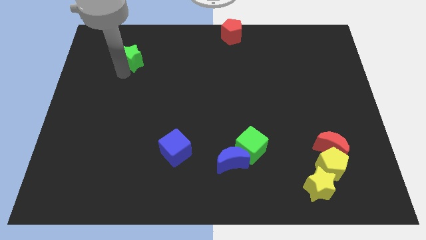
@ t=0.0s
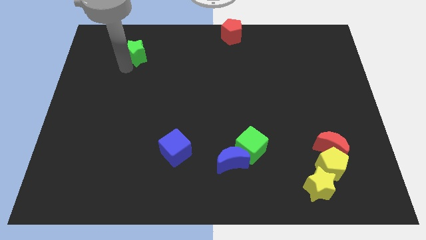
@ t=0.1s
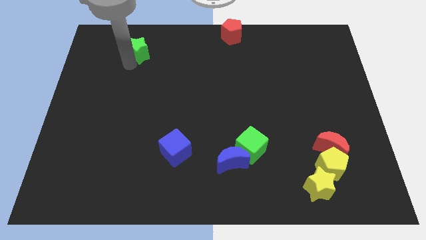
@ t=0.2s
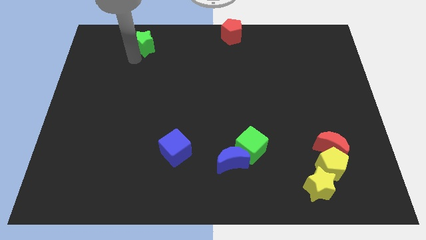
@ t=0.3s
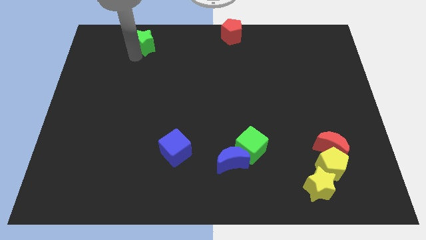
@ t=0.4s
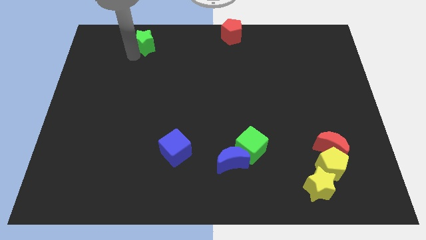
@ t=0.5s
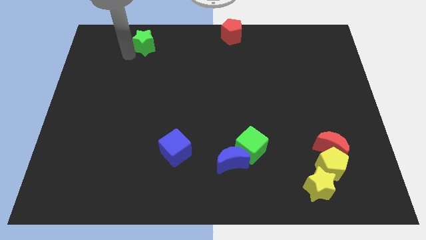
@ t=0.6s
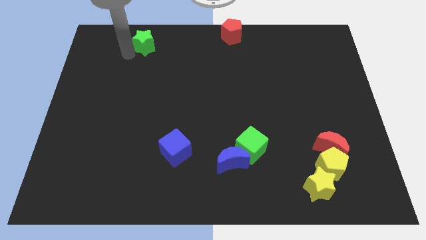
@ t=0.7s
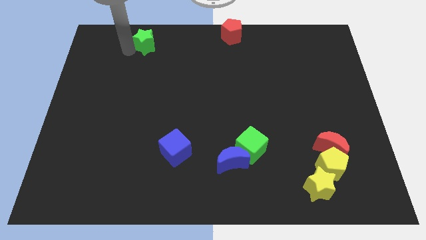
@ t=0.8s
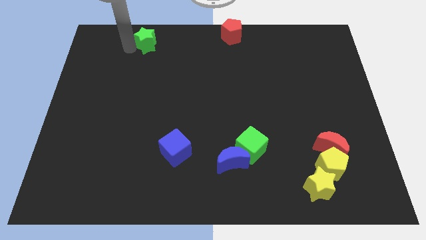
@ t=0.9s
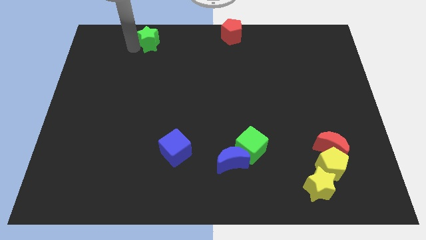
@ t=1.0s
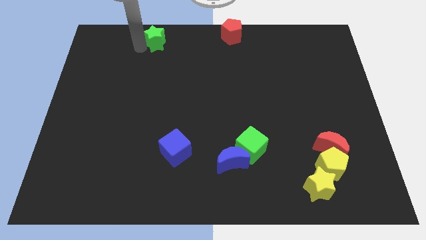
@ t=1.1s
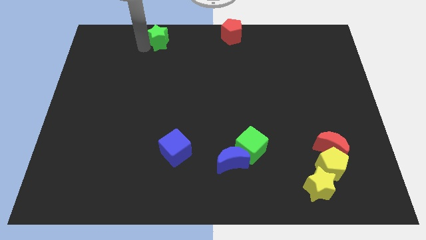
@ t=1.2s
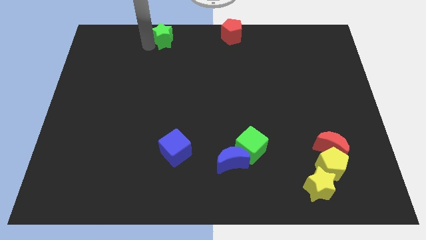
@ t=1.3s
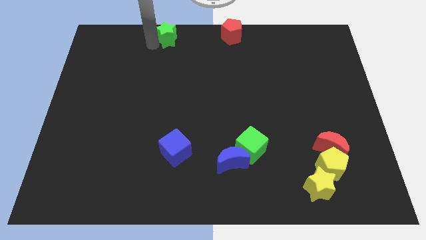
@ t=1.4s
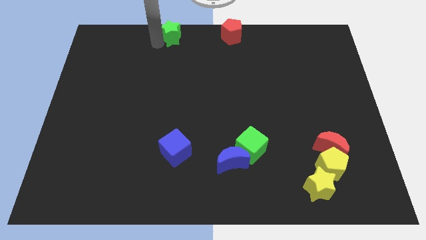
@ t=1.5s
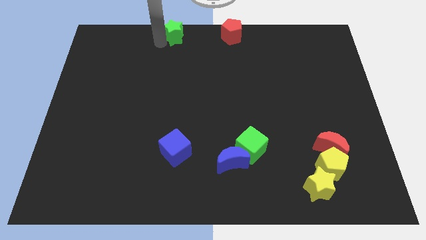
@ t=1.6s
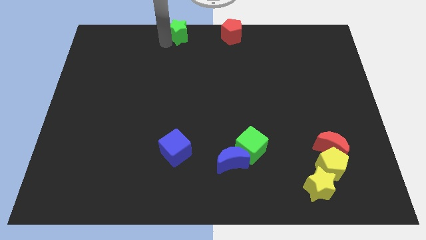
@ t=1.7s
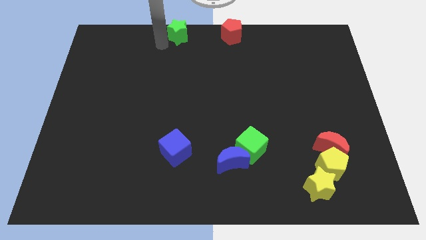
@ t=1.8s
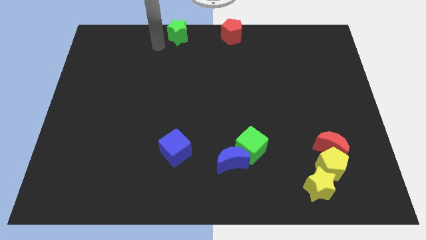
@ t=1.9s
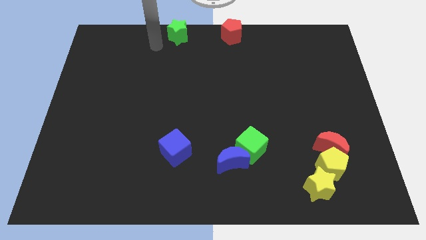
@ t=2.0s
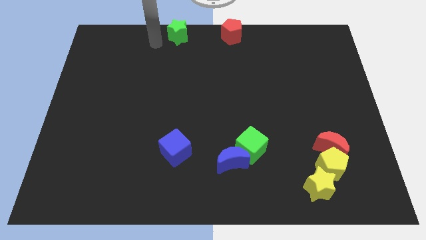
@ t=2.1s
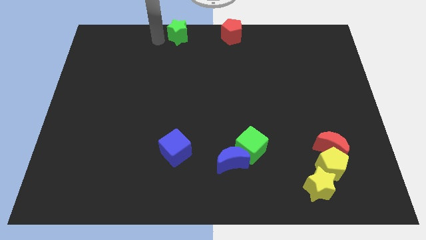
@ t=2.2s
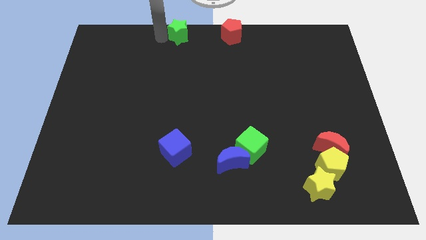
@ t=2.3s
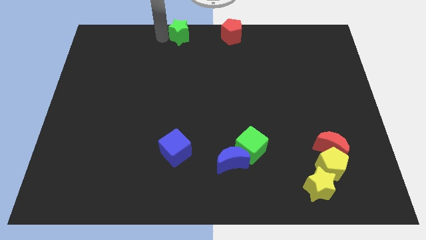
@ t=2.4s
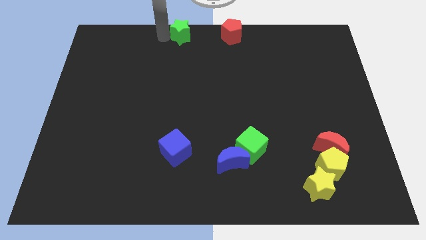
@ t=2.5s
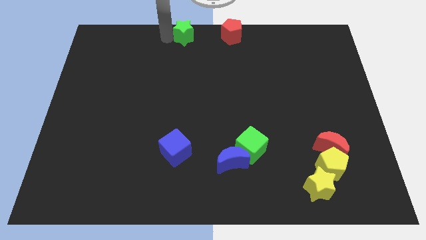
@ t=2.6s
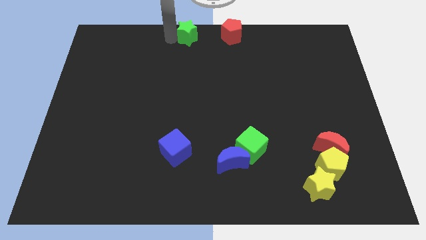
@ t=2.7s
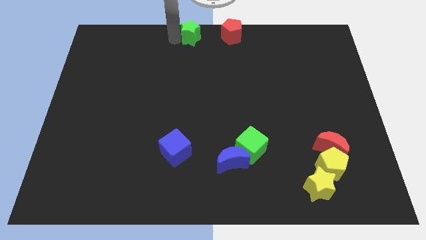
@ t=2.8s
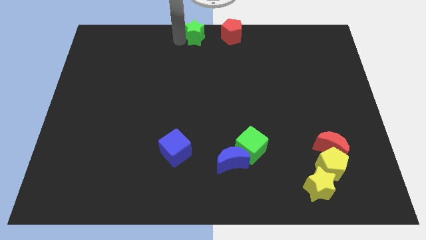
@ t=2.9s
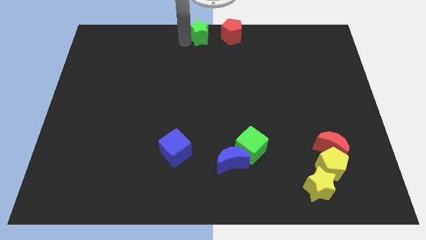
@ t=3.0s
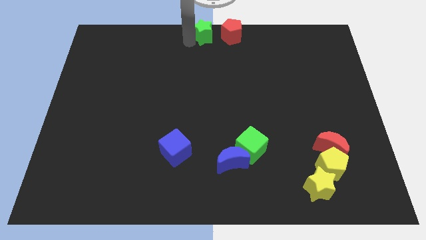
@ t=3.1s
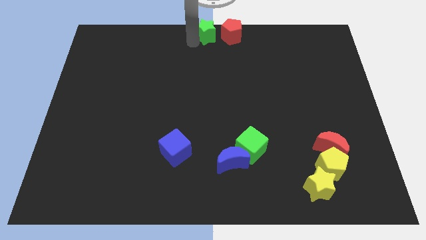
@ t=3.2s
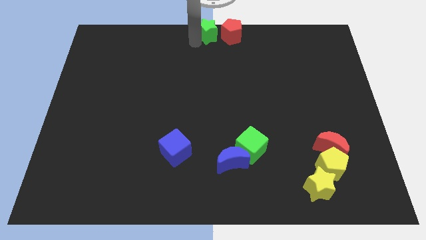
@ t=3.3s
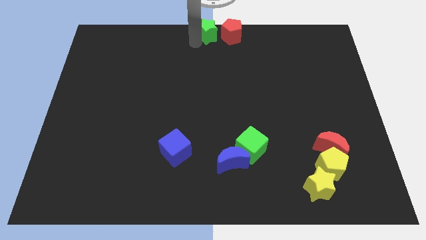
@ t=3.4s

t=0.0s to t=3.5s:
place the green star left to the red pentagon

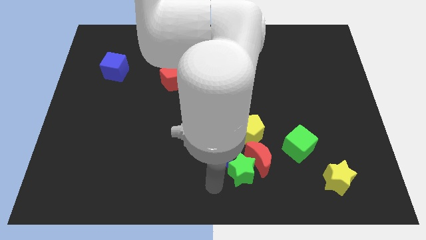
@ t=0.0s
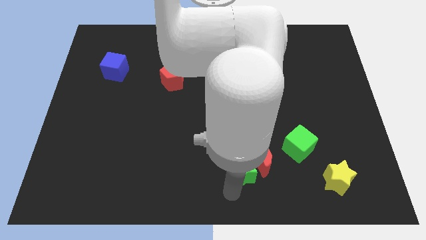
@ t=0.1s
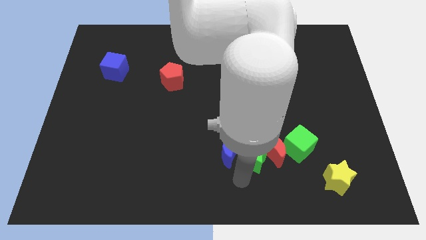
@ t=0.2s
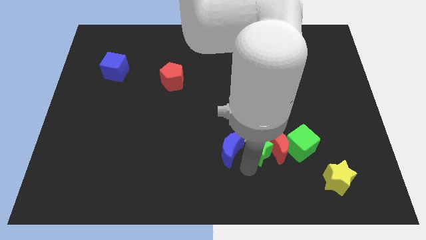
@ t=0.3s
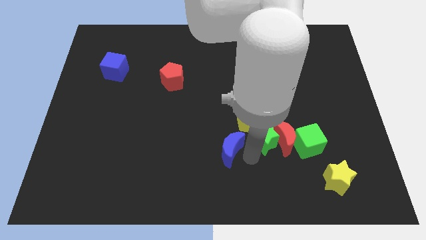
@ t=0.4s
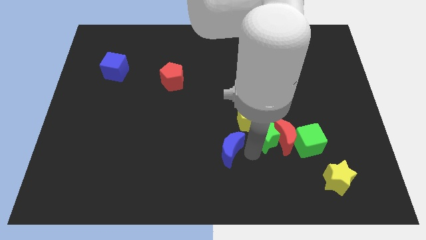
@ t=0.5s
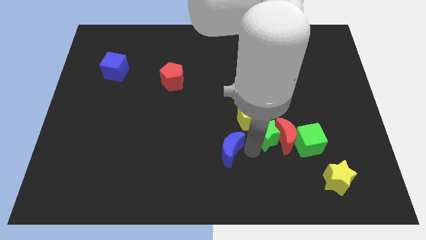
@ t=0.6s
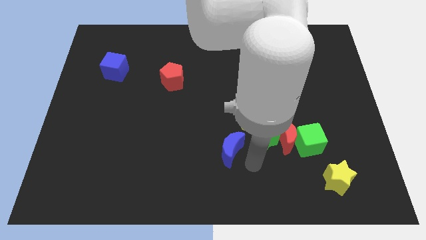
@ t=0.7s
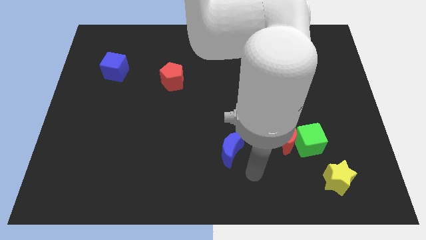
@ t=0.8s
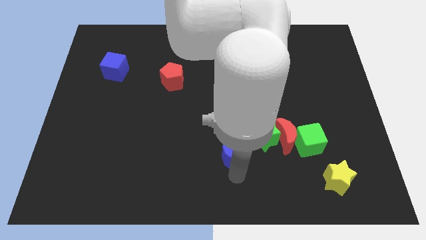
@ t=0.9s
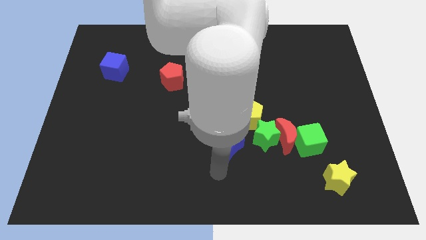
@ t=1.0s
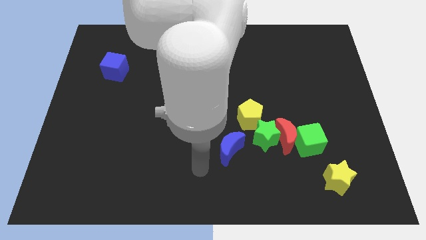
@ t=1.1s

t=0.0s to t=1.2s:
push the green star into the red crescent

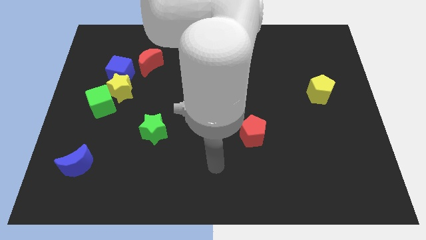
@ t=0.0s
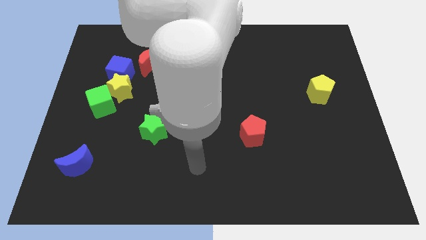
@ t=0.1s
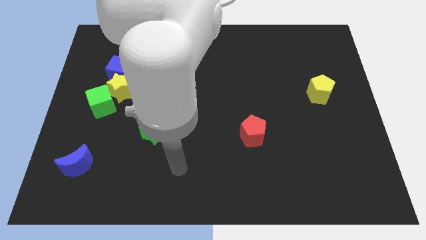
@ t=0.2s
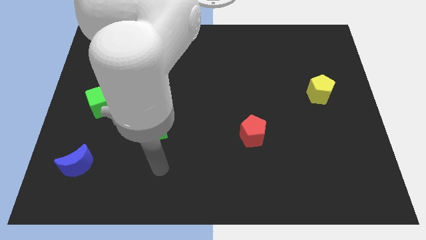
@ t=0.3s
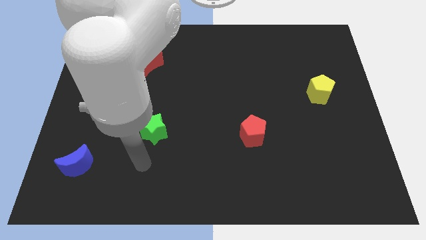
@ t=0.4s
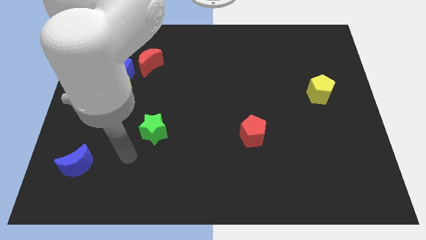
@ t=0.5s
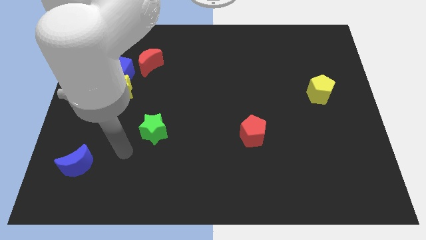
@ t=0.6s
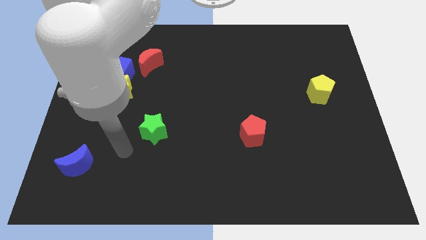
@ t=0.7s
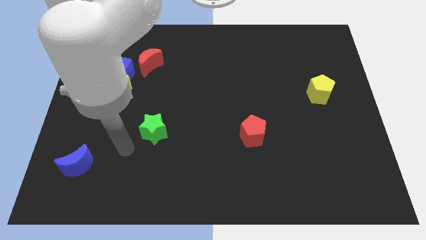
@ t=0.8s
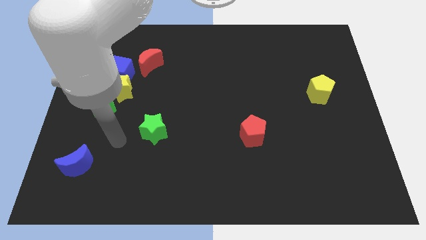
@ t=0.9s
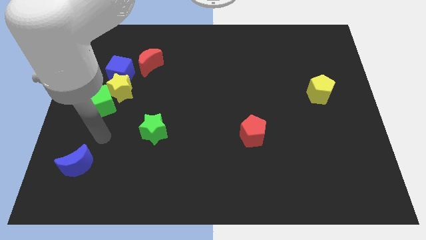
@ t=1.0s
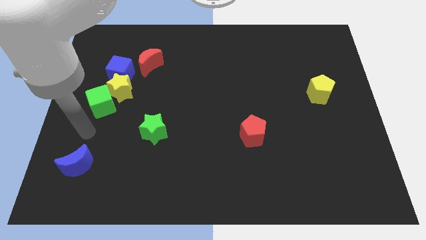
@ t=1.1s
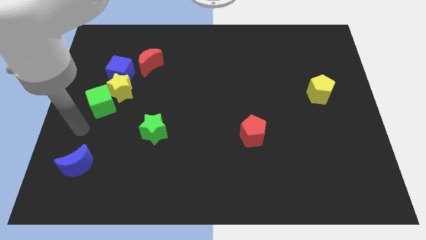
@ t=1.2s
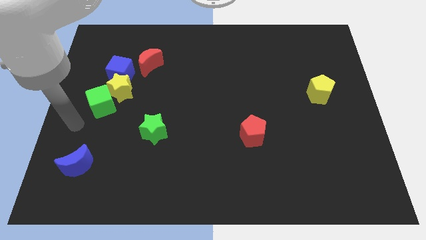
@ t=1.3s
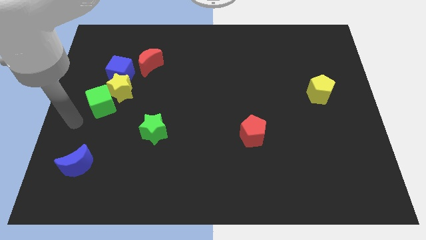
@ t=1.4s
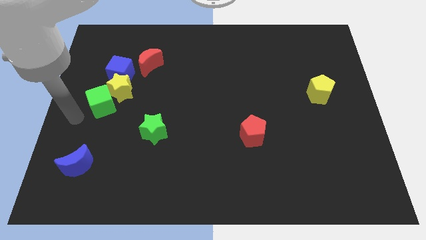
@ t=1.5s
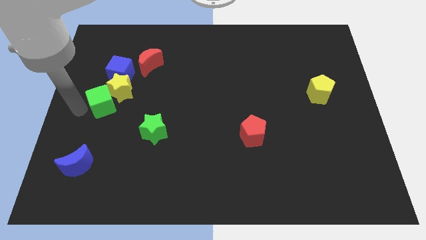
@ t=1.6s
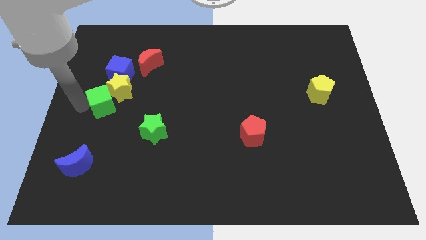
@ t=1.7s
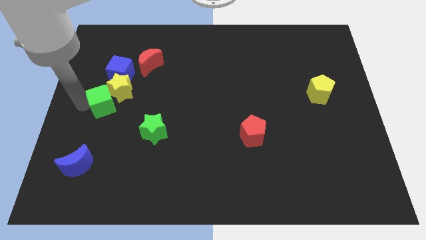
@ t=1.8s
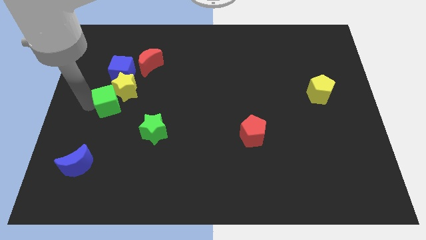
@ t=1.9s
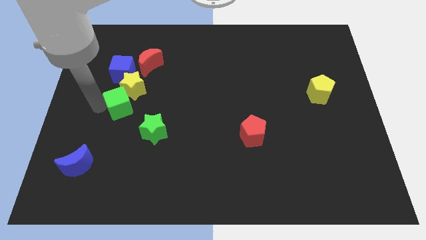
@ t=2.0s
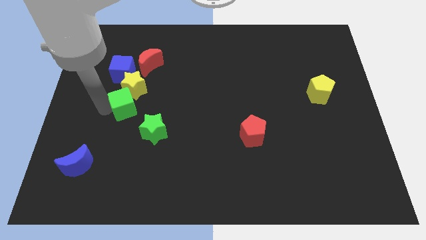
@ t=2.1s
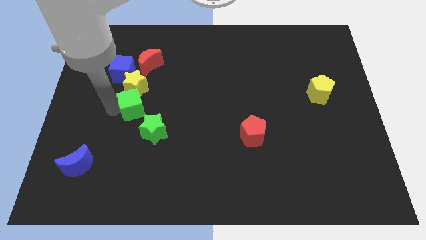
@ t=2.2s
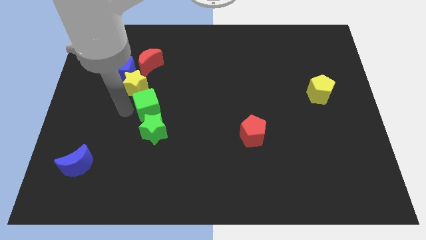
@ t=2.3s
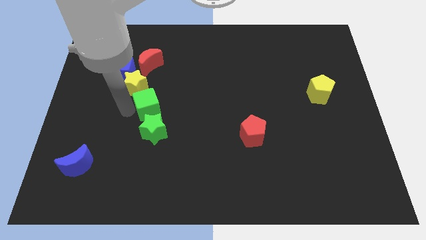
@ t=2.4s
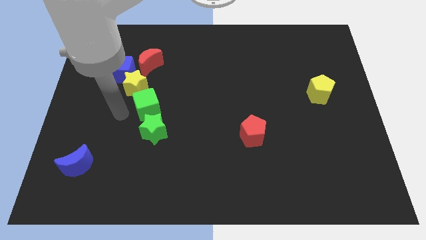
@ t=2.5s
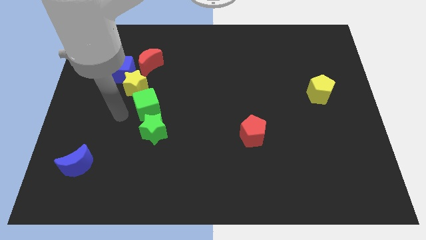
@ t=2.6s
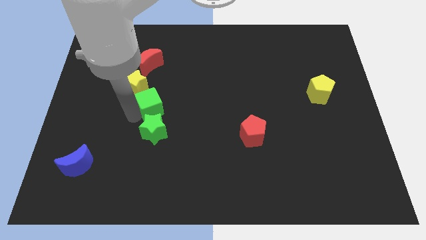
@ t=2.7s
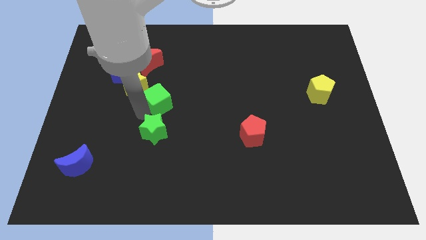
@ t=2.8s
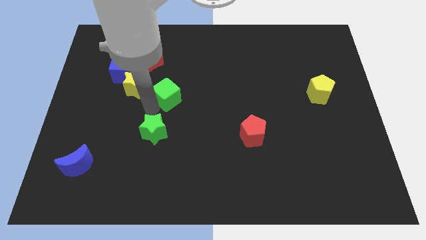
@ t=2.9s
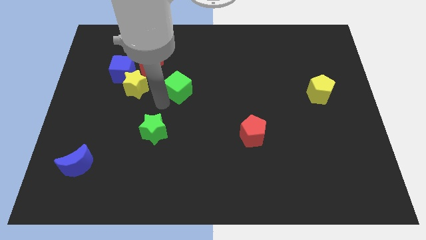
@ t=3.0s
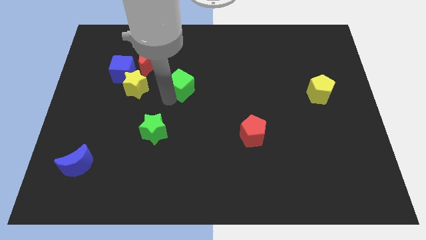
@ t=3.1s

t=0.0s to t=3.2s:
move the green cube right to the yellow star

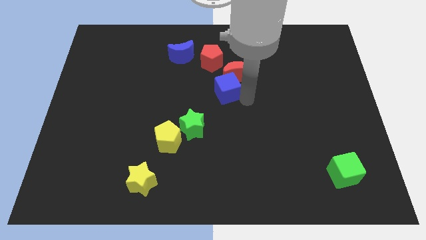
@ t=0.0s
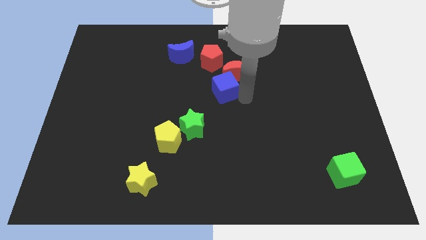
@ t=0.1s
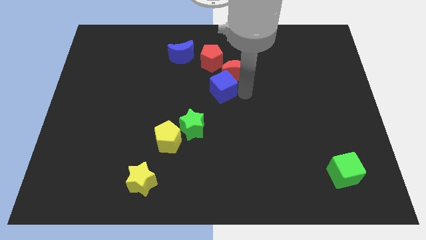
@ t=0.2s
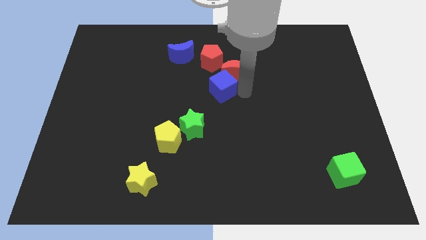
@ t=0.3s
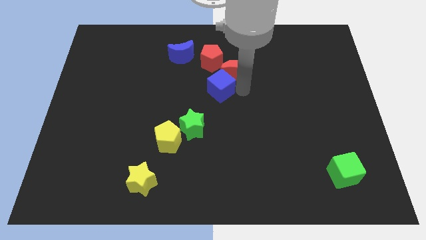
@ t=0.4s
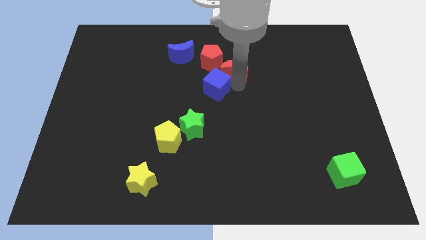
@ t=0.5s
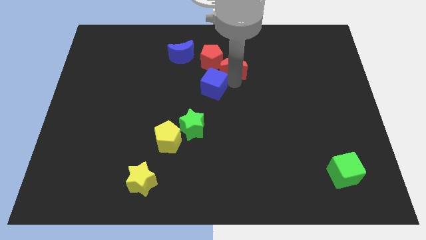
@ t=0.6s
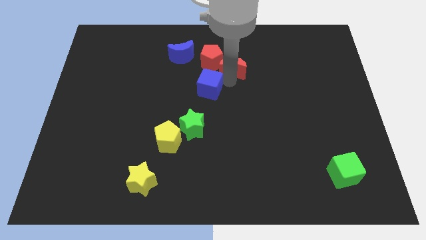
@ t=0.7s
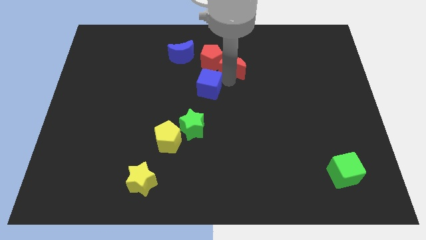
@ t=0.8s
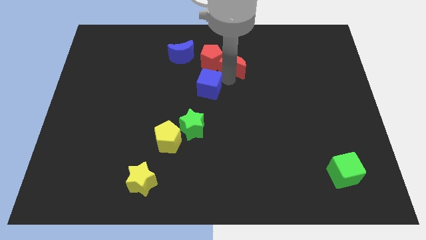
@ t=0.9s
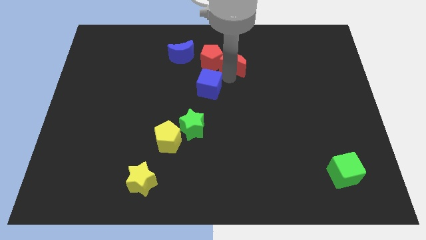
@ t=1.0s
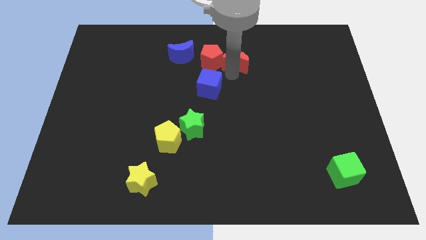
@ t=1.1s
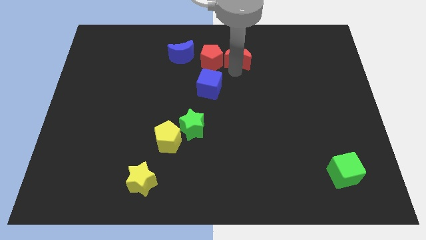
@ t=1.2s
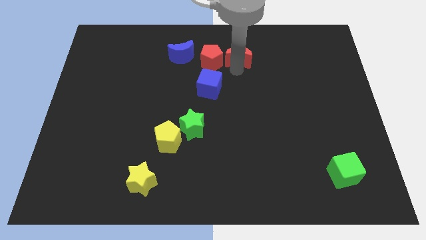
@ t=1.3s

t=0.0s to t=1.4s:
place the blue cube below the red moon
